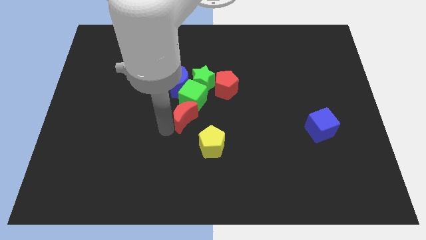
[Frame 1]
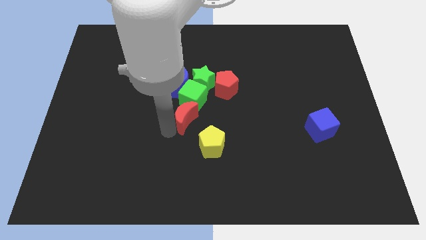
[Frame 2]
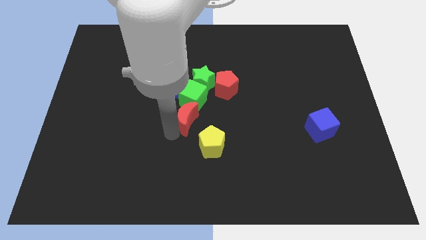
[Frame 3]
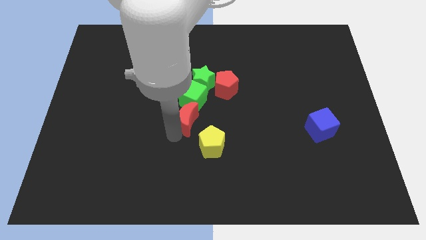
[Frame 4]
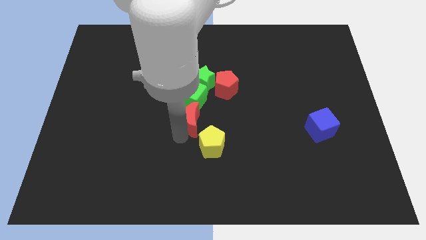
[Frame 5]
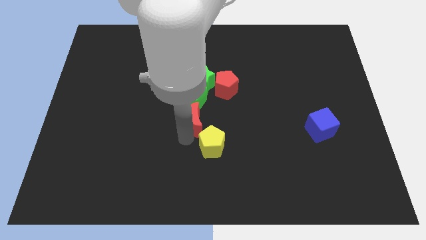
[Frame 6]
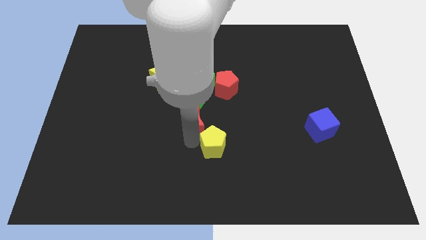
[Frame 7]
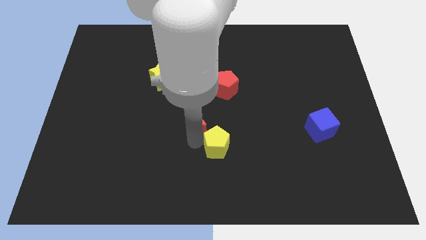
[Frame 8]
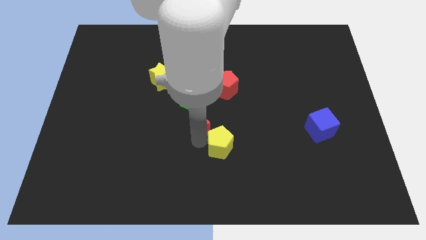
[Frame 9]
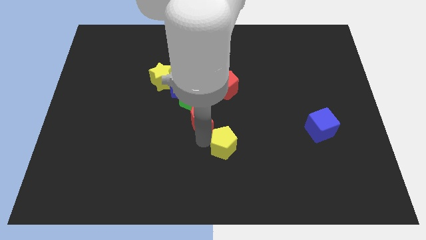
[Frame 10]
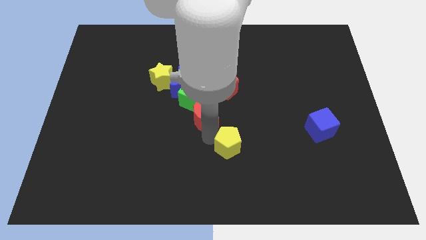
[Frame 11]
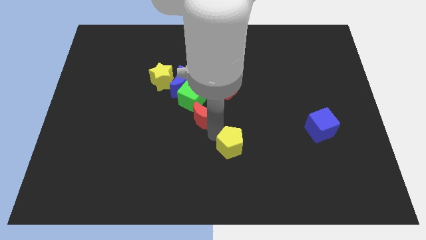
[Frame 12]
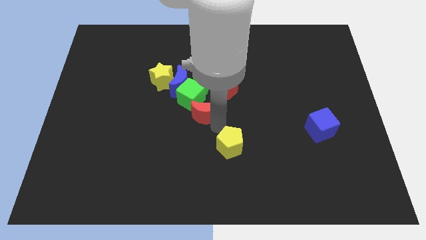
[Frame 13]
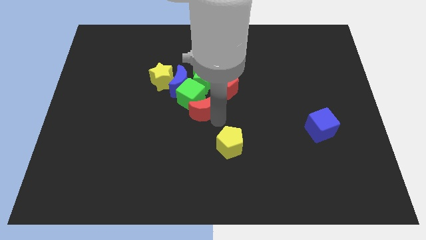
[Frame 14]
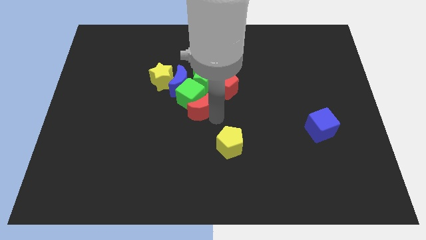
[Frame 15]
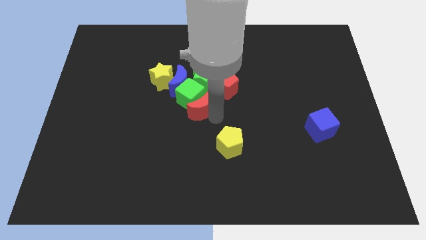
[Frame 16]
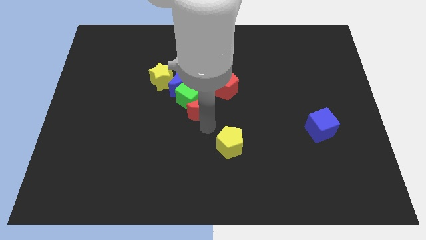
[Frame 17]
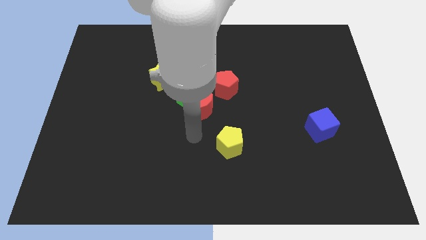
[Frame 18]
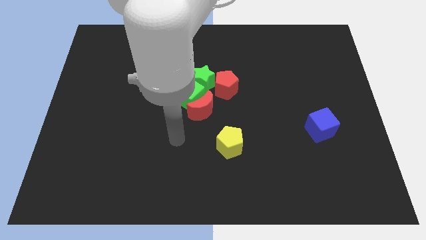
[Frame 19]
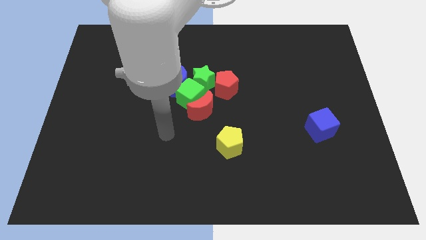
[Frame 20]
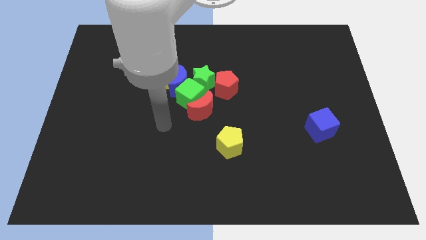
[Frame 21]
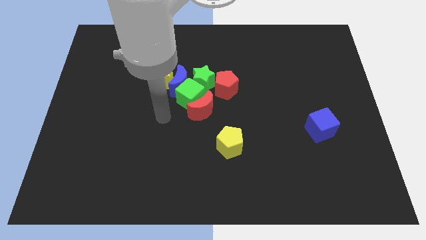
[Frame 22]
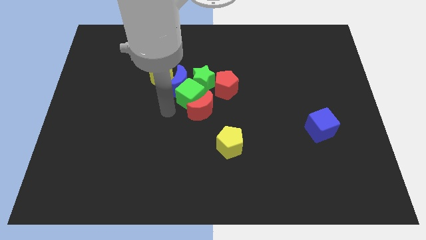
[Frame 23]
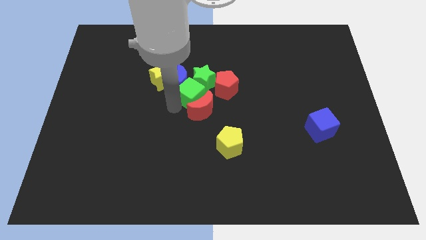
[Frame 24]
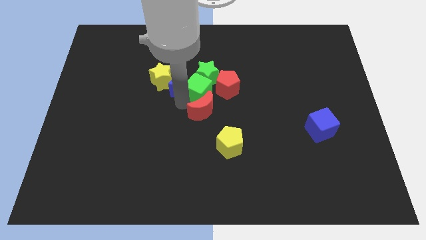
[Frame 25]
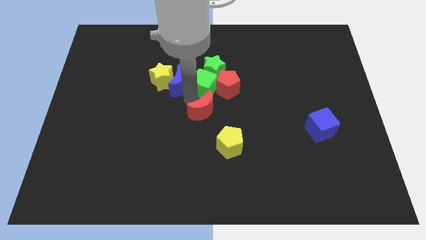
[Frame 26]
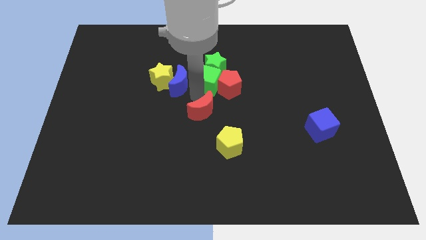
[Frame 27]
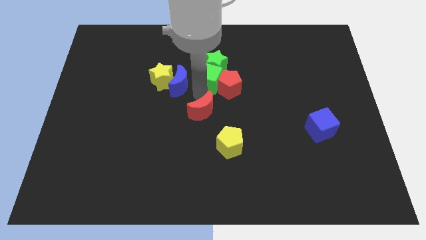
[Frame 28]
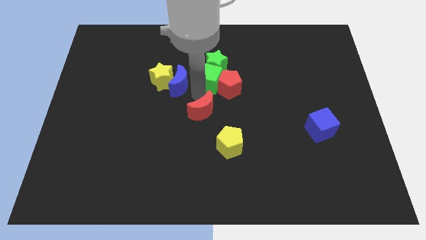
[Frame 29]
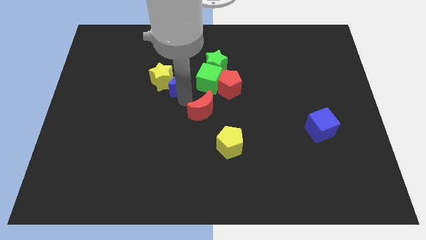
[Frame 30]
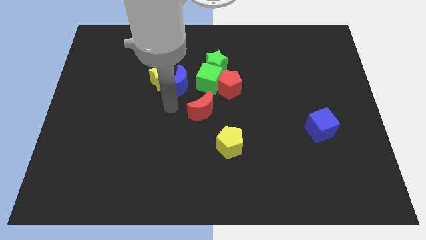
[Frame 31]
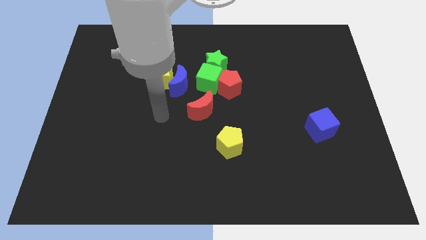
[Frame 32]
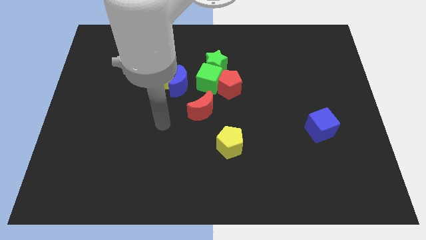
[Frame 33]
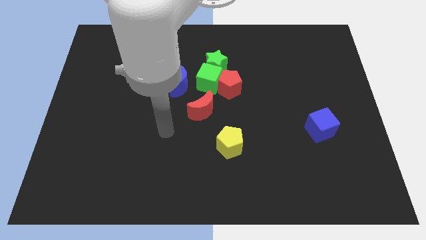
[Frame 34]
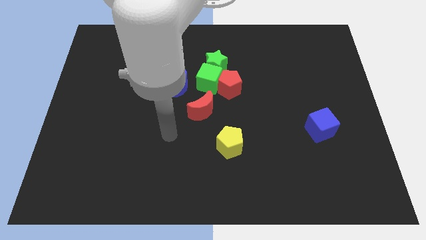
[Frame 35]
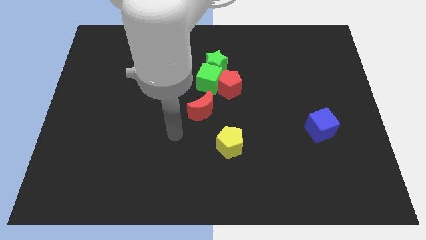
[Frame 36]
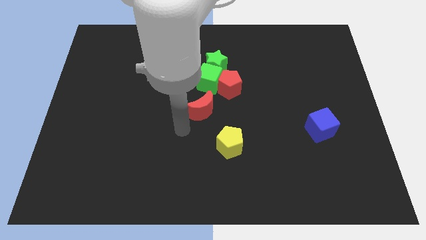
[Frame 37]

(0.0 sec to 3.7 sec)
slightly push the green star towards the top middle of the board

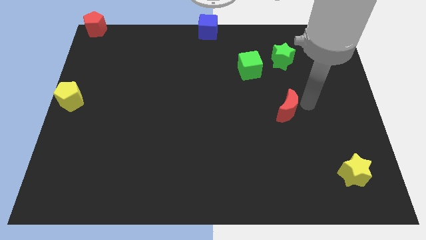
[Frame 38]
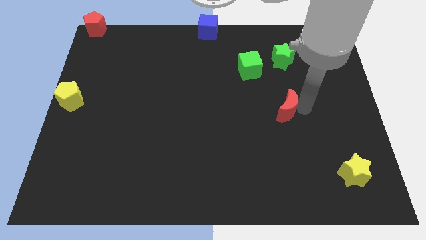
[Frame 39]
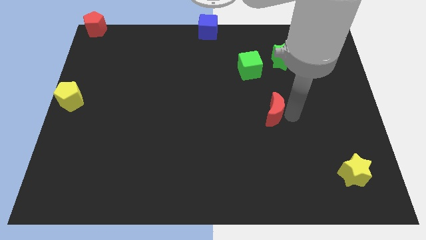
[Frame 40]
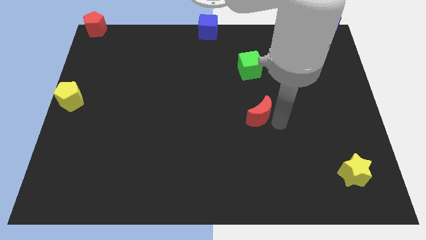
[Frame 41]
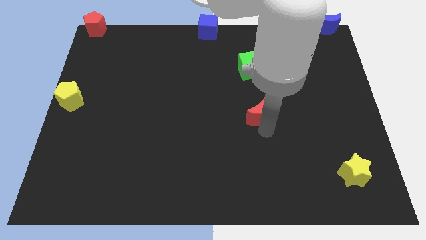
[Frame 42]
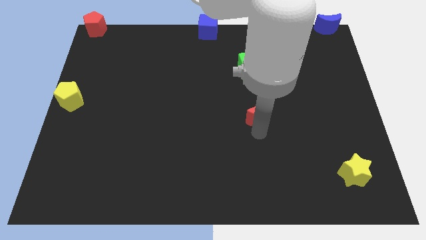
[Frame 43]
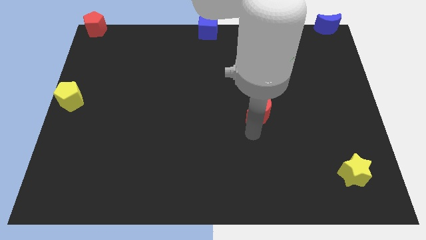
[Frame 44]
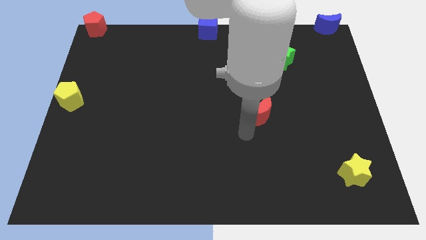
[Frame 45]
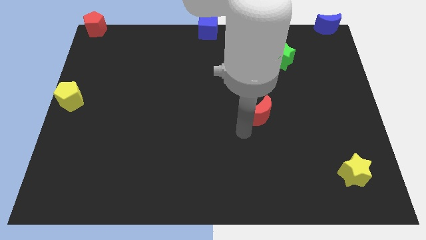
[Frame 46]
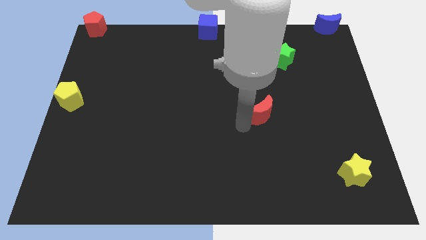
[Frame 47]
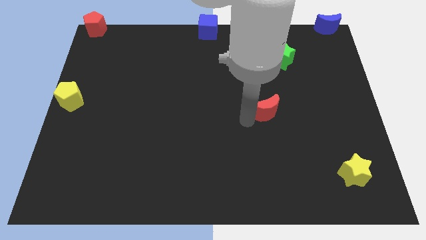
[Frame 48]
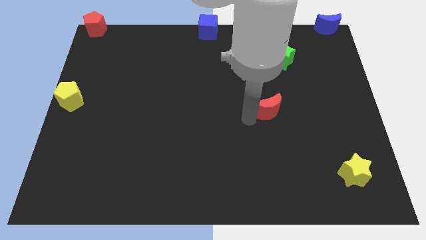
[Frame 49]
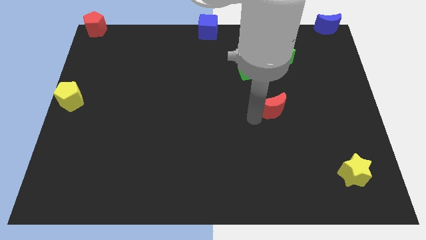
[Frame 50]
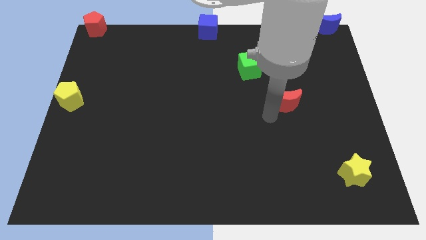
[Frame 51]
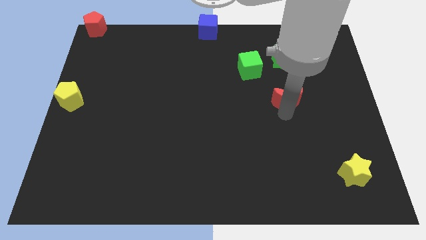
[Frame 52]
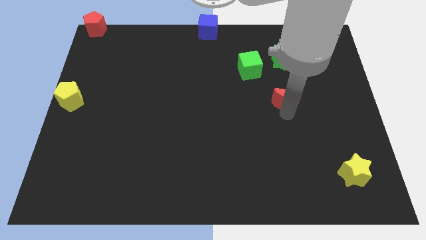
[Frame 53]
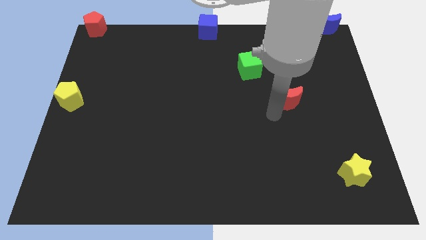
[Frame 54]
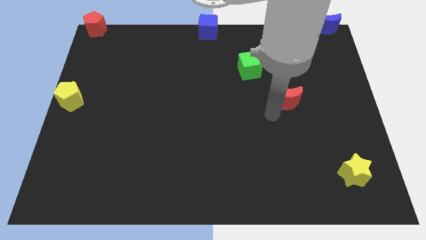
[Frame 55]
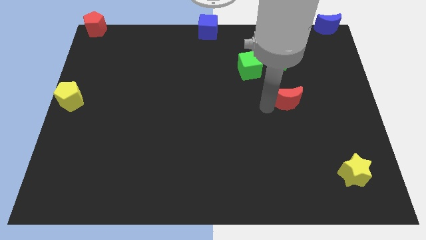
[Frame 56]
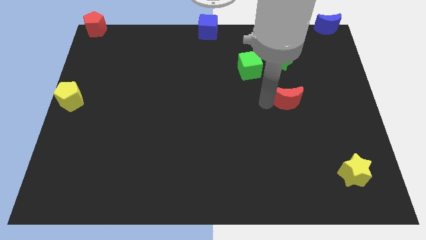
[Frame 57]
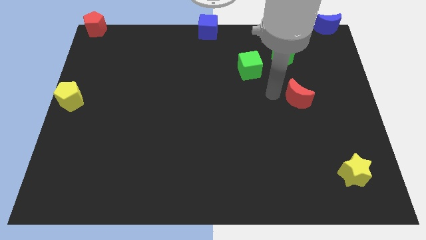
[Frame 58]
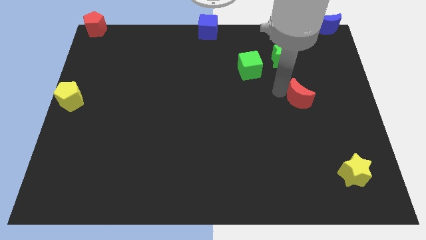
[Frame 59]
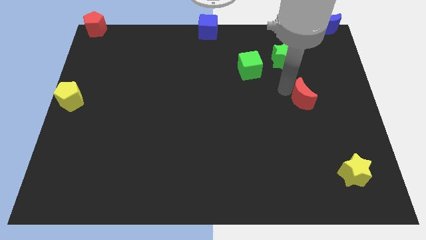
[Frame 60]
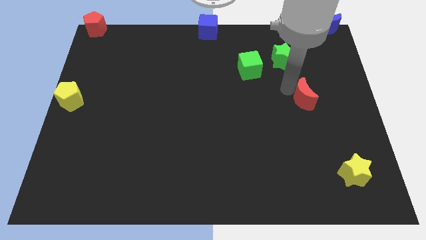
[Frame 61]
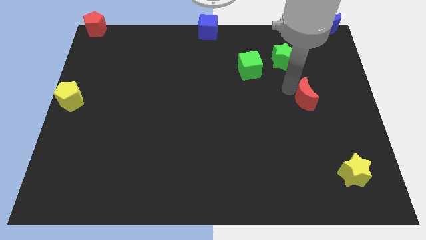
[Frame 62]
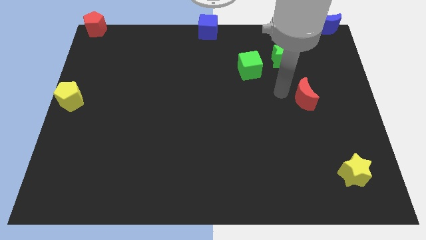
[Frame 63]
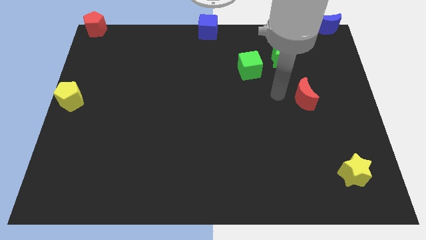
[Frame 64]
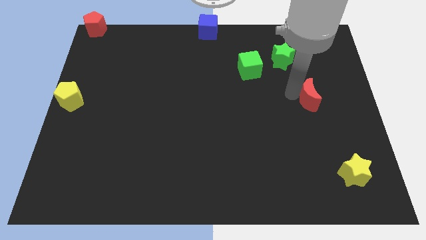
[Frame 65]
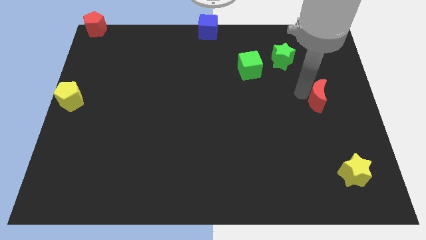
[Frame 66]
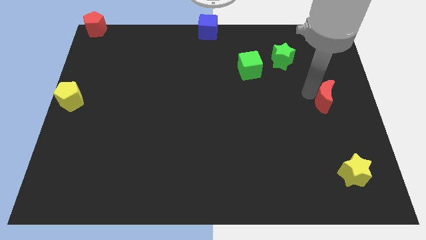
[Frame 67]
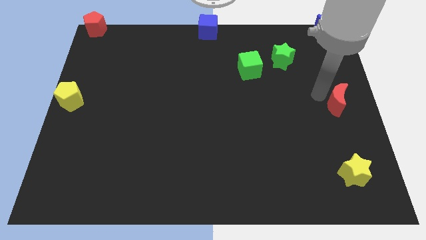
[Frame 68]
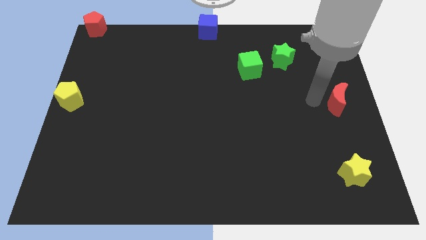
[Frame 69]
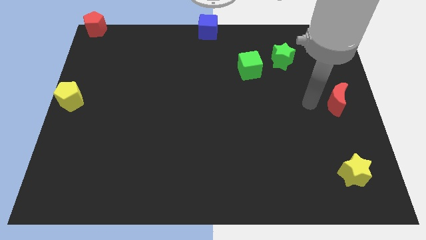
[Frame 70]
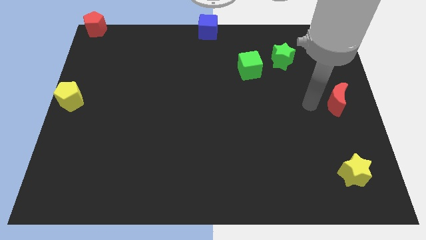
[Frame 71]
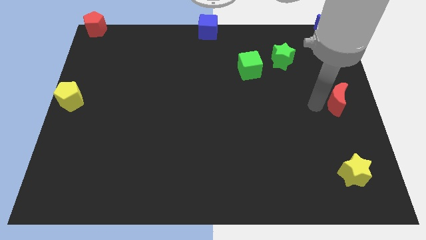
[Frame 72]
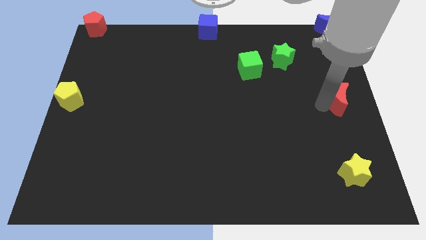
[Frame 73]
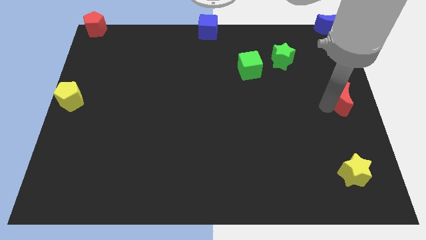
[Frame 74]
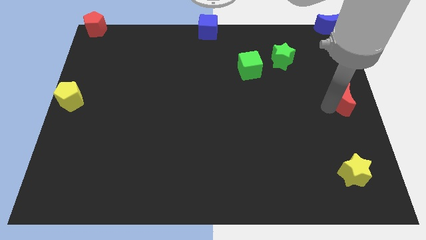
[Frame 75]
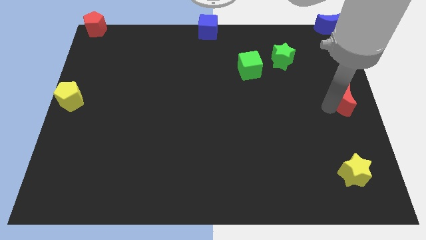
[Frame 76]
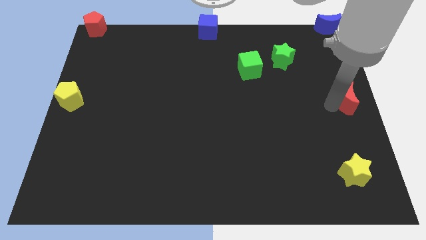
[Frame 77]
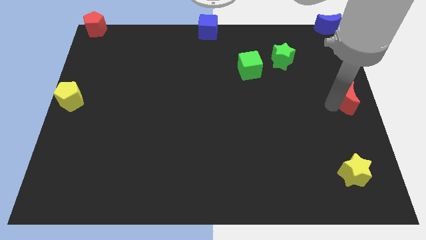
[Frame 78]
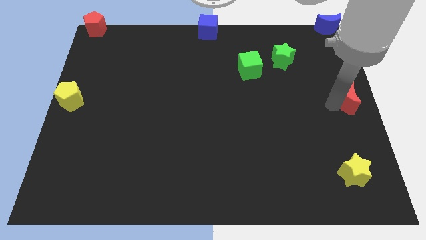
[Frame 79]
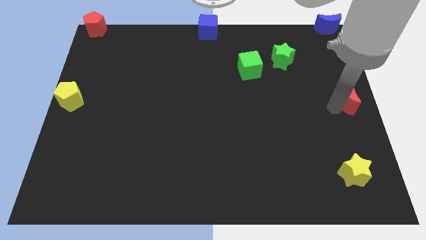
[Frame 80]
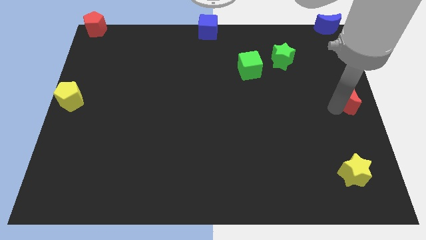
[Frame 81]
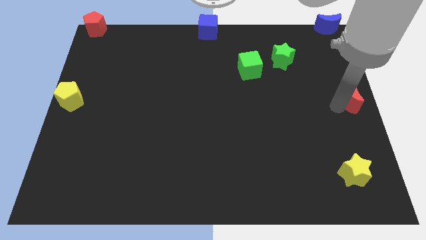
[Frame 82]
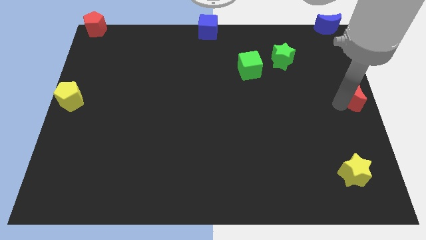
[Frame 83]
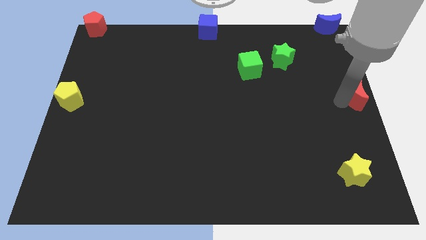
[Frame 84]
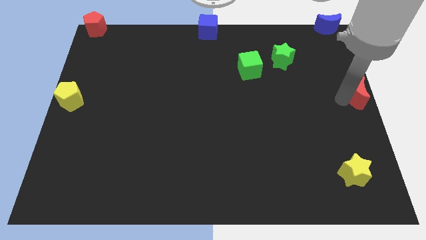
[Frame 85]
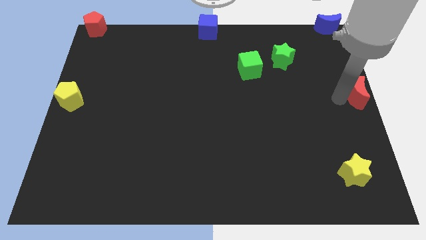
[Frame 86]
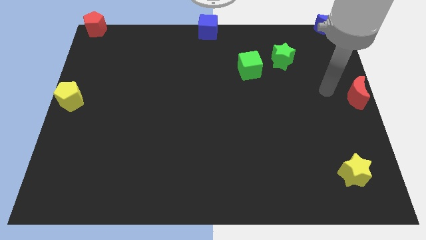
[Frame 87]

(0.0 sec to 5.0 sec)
push the red crescent at the center right of the board

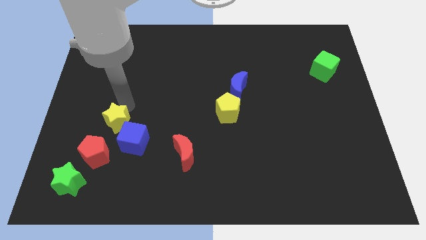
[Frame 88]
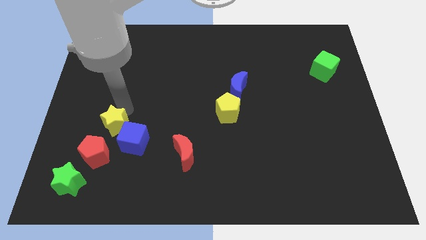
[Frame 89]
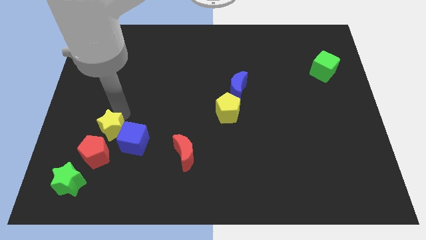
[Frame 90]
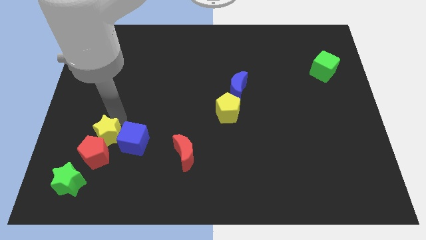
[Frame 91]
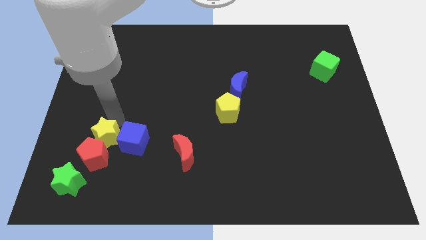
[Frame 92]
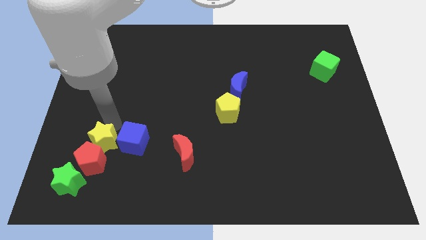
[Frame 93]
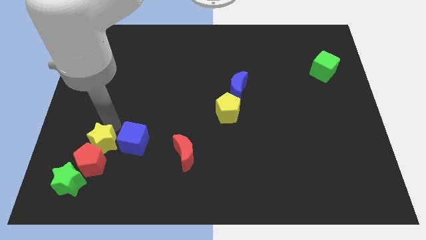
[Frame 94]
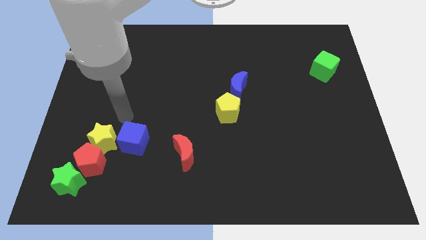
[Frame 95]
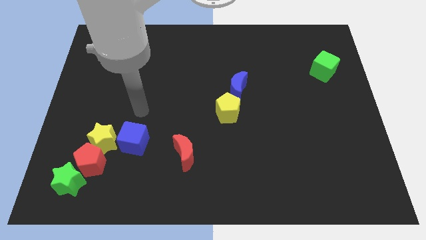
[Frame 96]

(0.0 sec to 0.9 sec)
move the yellow star to the left of the blue cube
